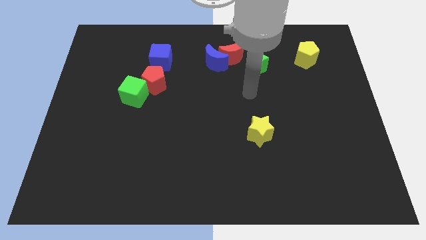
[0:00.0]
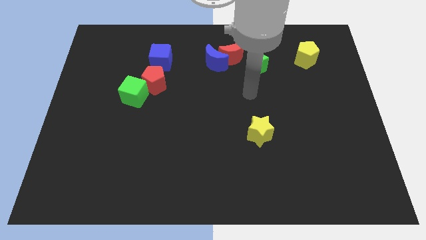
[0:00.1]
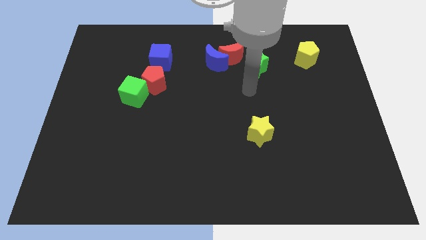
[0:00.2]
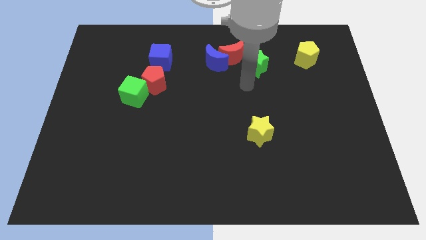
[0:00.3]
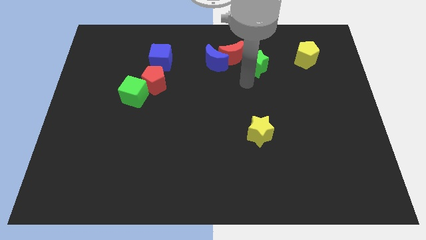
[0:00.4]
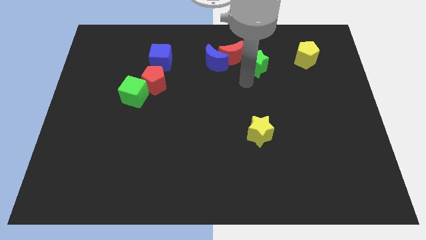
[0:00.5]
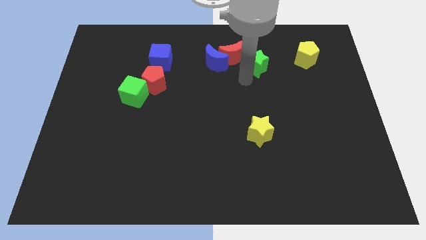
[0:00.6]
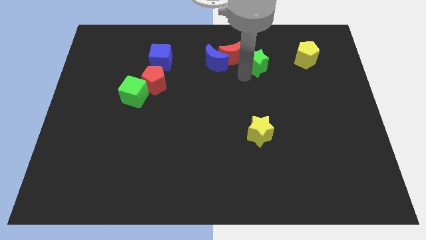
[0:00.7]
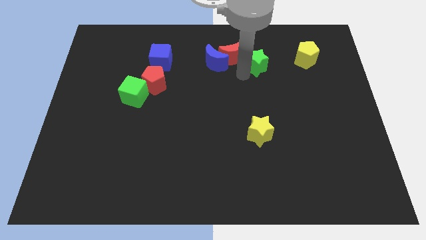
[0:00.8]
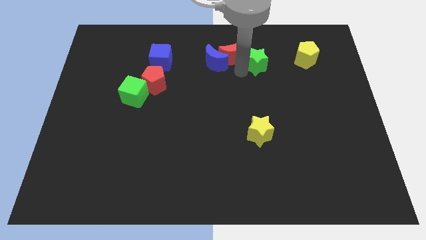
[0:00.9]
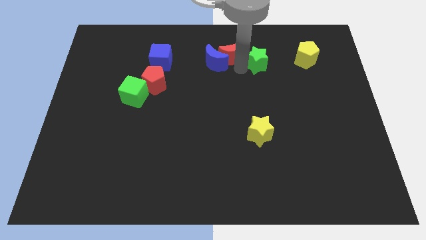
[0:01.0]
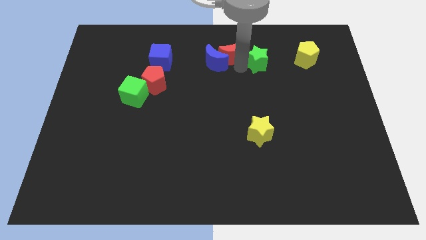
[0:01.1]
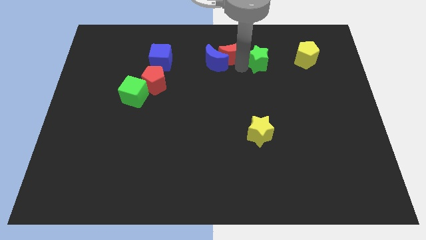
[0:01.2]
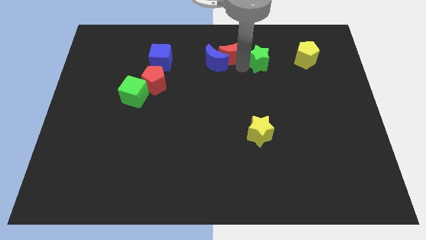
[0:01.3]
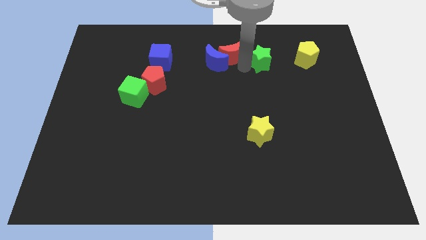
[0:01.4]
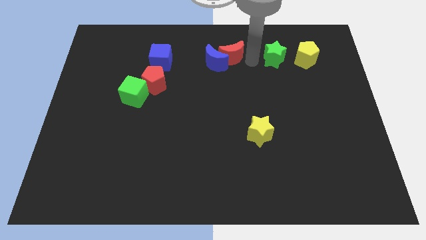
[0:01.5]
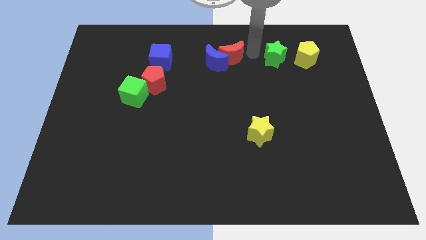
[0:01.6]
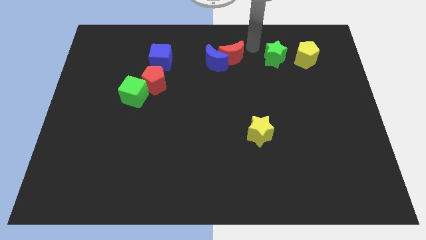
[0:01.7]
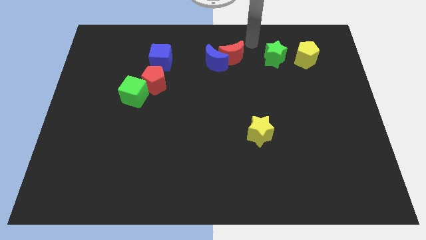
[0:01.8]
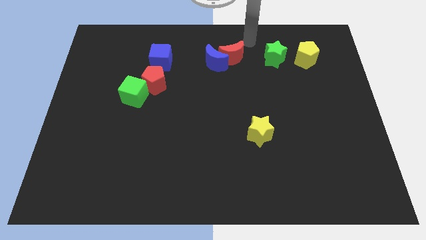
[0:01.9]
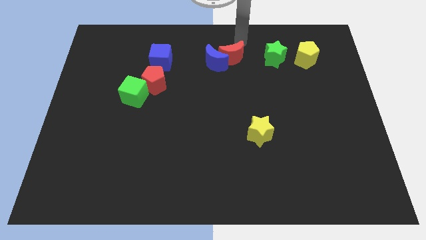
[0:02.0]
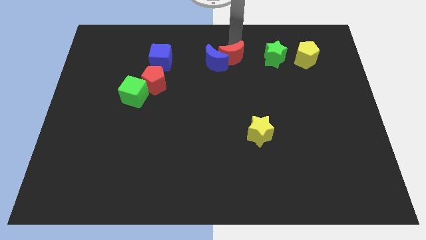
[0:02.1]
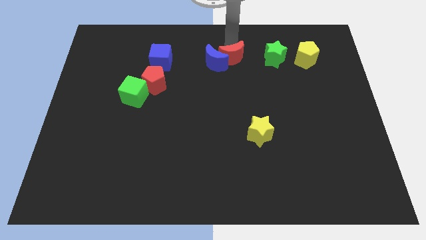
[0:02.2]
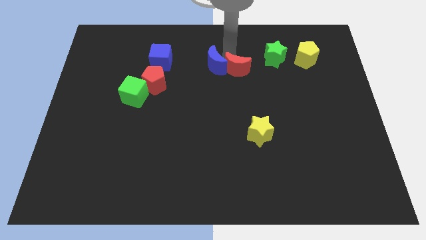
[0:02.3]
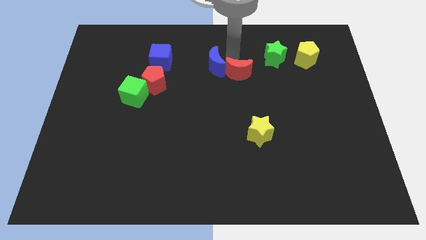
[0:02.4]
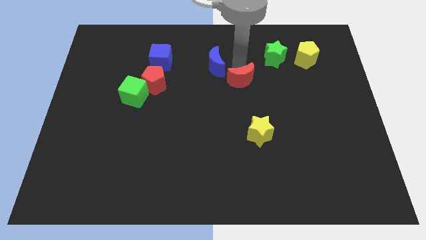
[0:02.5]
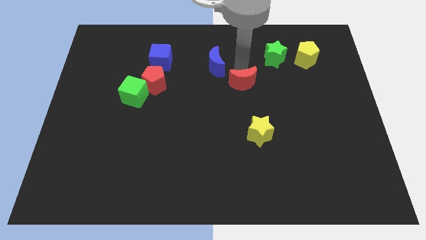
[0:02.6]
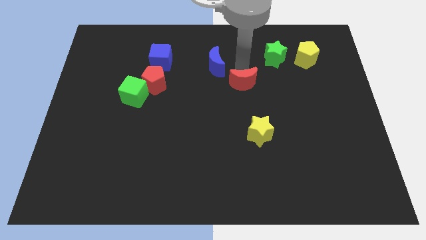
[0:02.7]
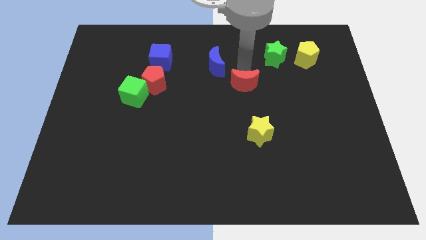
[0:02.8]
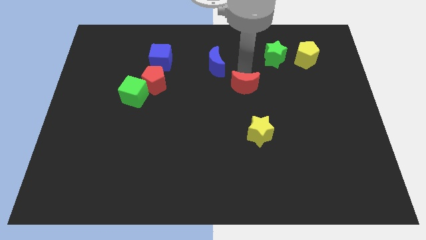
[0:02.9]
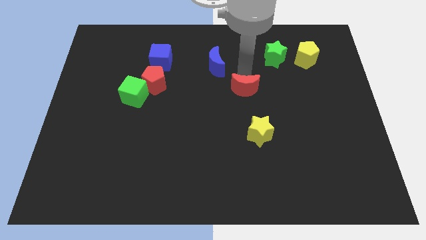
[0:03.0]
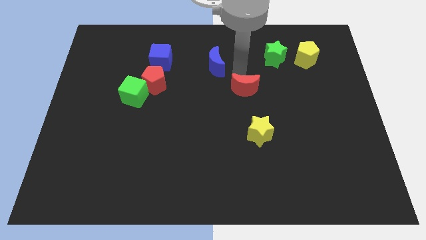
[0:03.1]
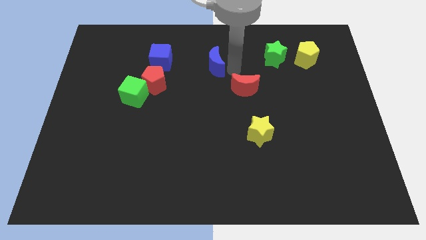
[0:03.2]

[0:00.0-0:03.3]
move the green star to the left of th yellow pentagon

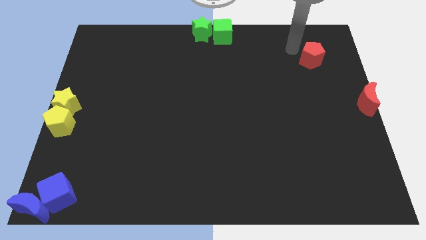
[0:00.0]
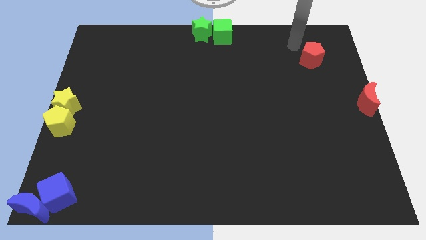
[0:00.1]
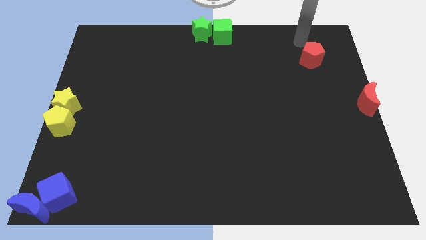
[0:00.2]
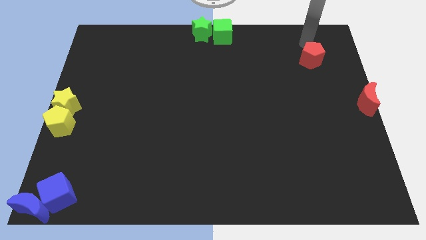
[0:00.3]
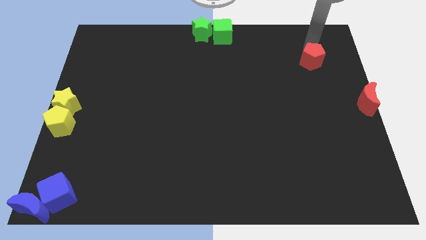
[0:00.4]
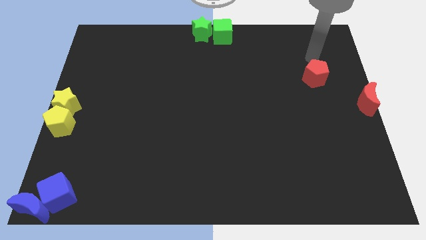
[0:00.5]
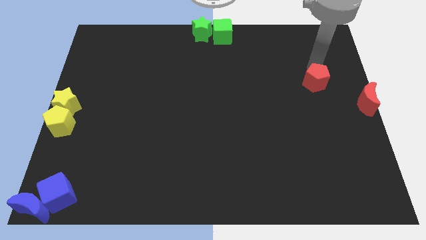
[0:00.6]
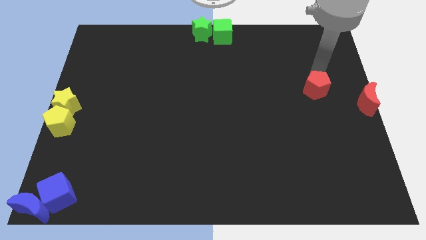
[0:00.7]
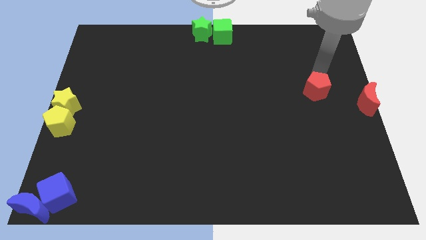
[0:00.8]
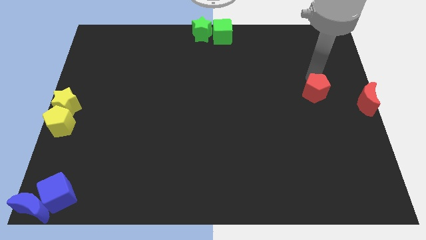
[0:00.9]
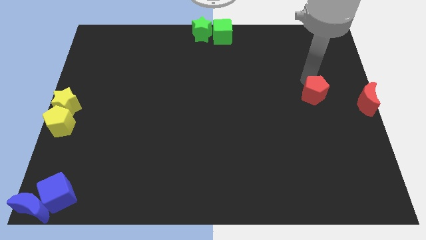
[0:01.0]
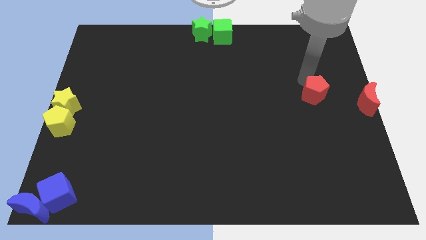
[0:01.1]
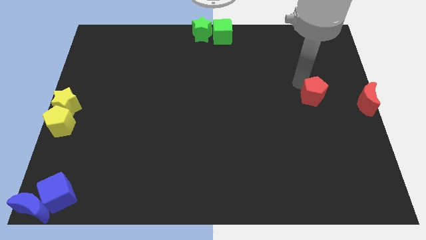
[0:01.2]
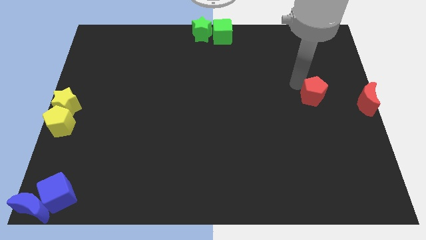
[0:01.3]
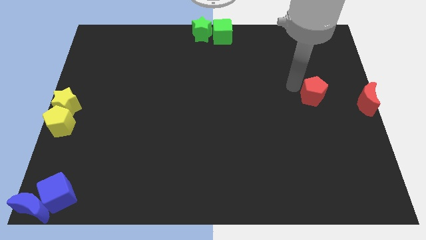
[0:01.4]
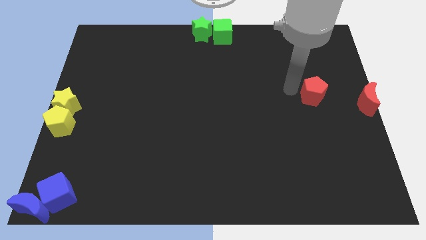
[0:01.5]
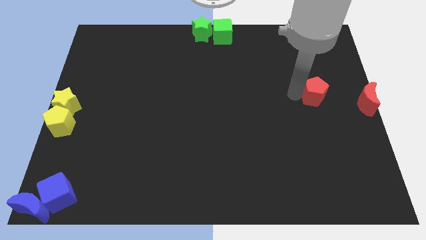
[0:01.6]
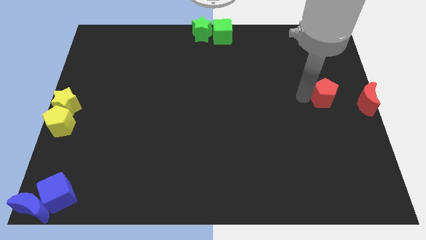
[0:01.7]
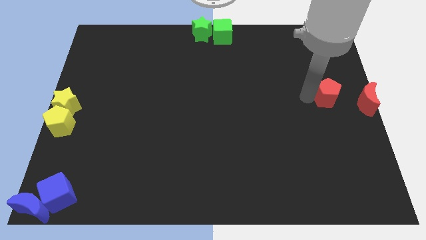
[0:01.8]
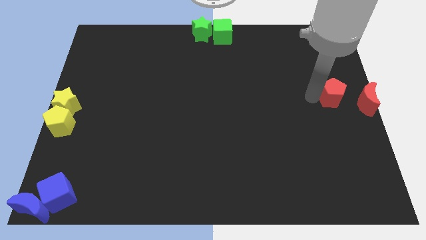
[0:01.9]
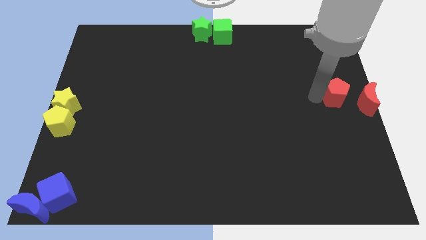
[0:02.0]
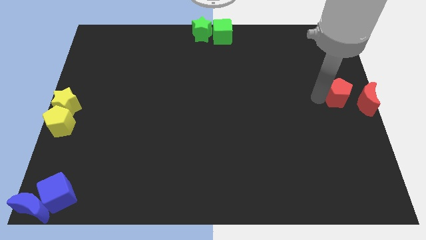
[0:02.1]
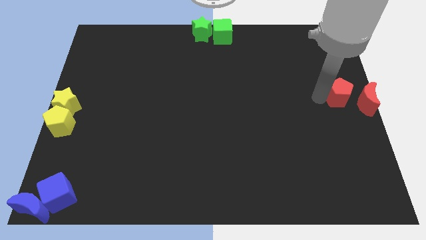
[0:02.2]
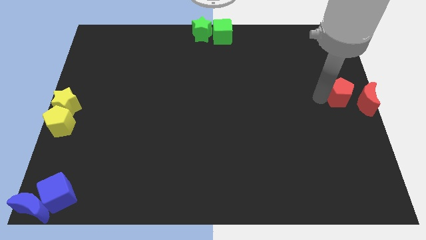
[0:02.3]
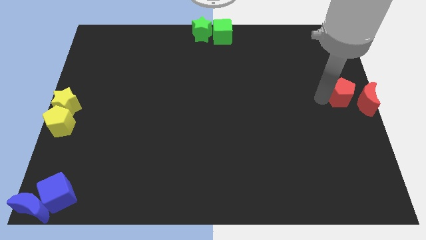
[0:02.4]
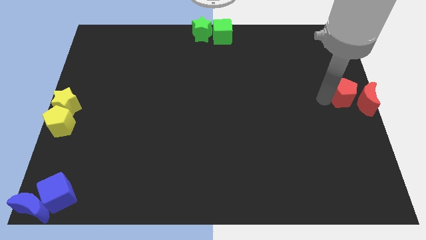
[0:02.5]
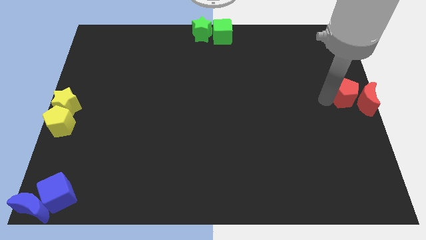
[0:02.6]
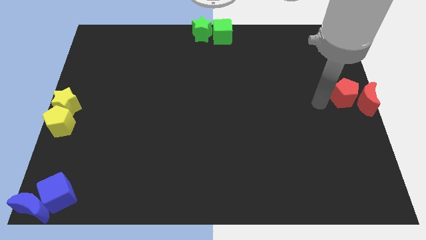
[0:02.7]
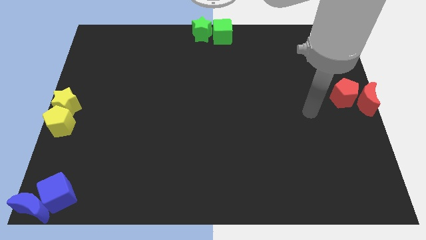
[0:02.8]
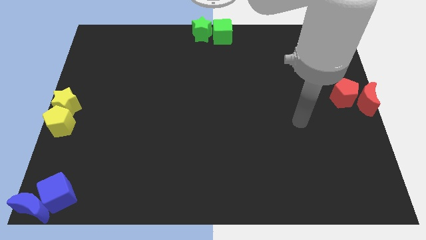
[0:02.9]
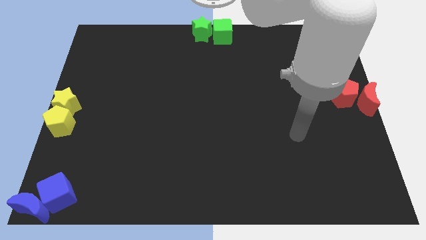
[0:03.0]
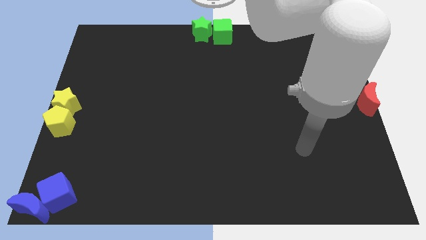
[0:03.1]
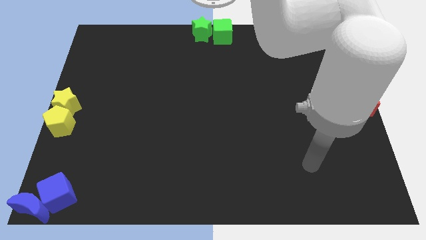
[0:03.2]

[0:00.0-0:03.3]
move the red pentagon left to the red crescent

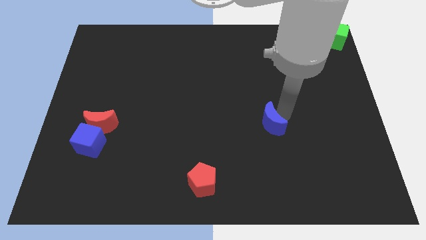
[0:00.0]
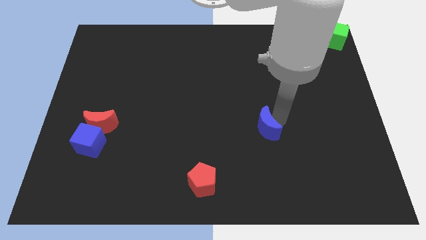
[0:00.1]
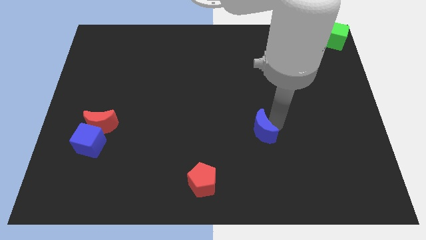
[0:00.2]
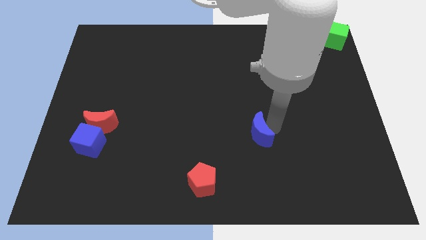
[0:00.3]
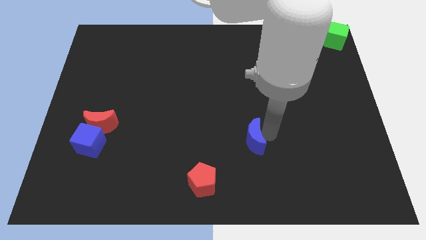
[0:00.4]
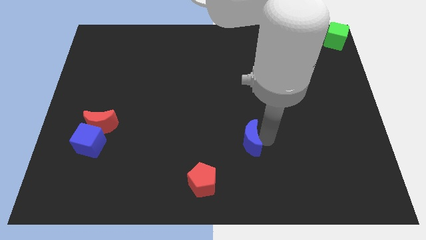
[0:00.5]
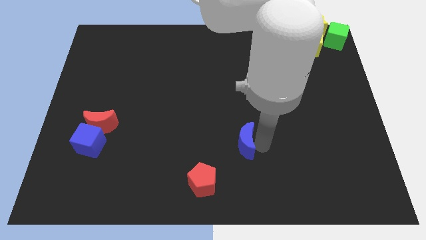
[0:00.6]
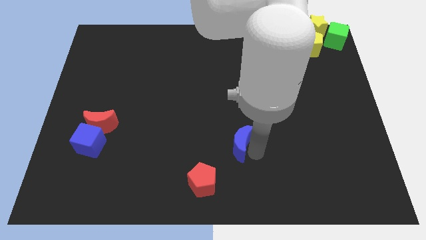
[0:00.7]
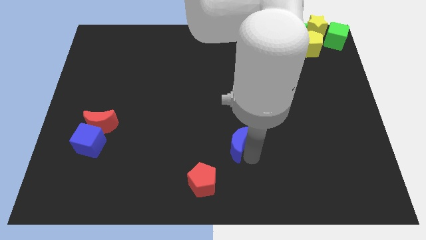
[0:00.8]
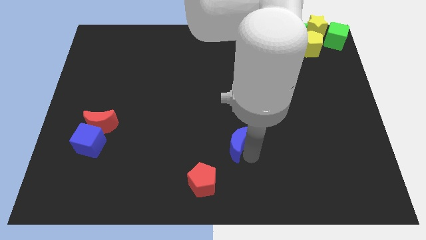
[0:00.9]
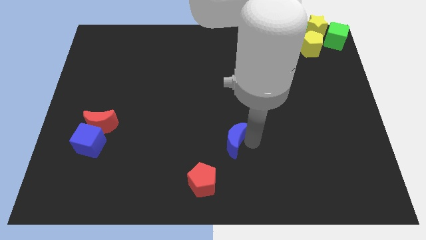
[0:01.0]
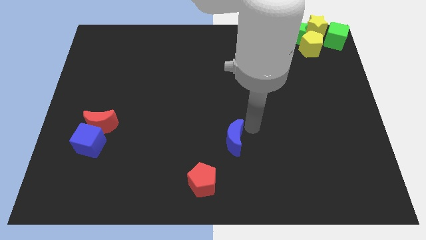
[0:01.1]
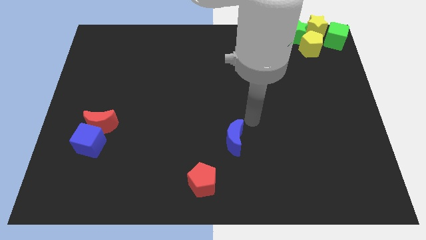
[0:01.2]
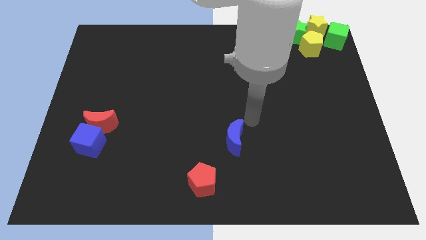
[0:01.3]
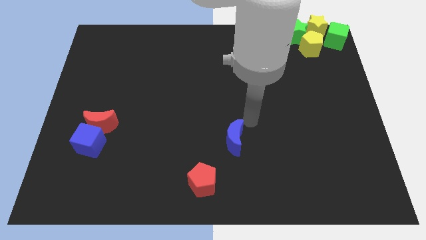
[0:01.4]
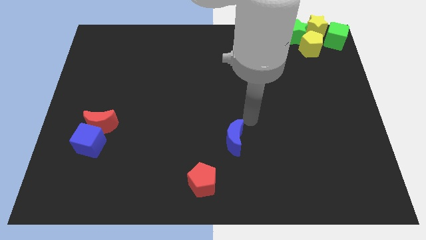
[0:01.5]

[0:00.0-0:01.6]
place the blue moon diagonally top right to the red pentagon

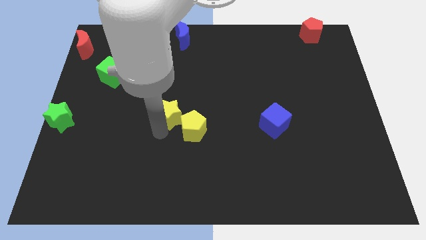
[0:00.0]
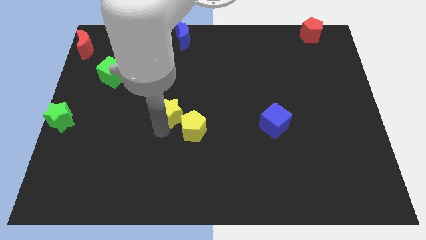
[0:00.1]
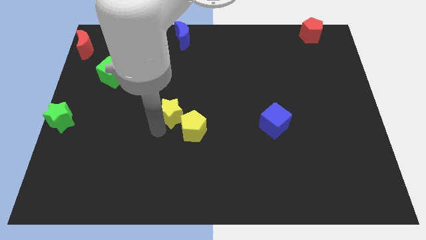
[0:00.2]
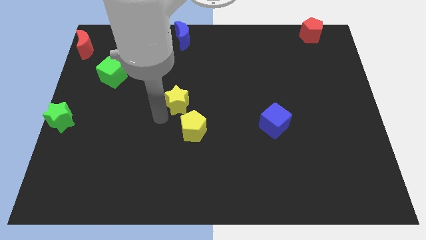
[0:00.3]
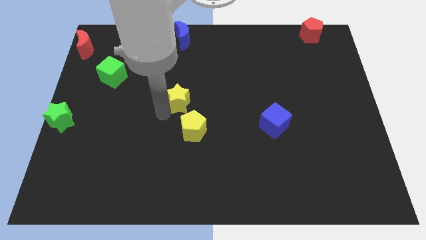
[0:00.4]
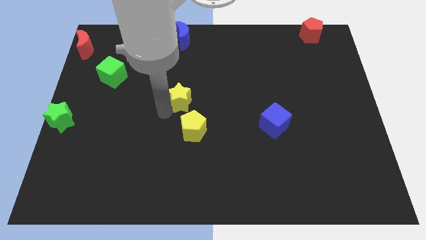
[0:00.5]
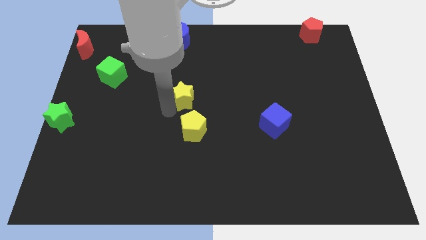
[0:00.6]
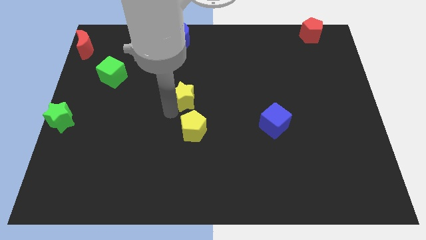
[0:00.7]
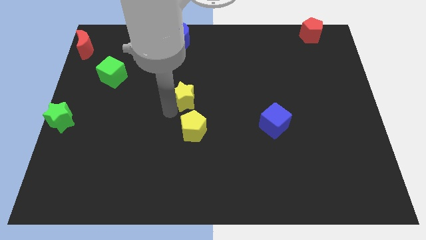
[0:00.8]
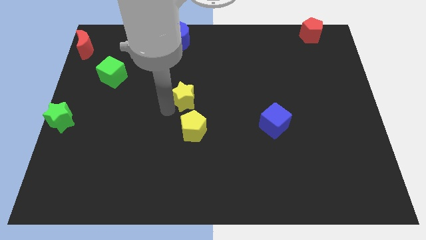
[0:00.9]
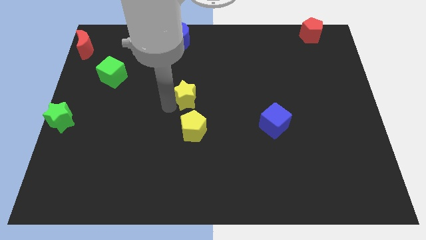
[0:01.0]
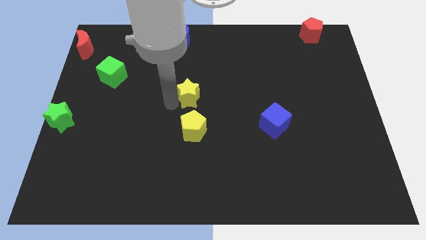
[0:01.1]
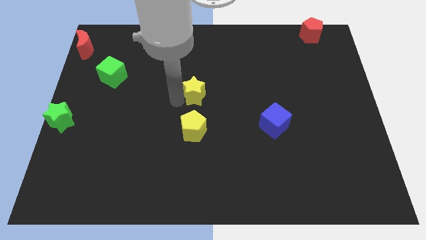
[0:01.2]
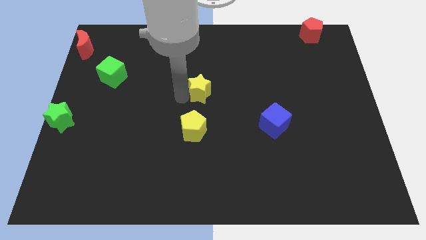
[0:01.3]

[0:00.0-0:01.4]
place the yellow star above the yellow pentagon
